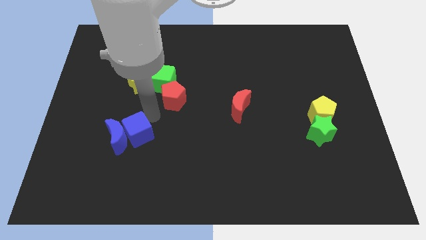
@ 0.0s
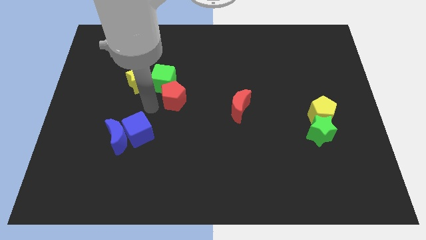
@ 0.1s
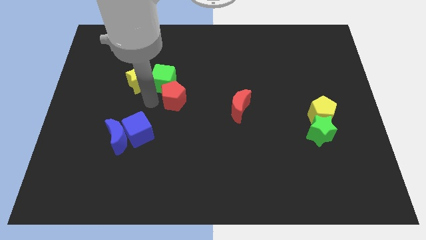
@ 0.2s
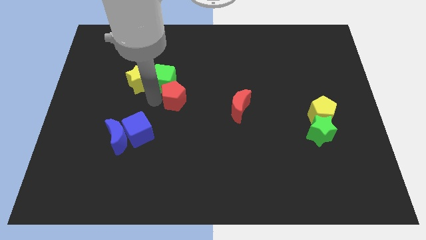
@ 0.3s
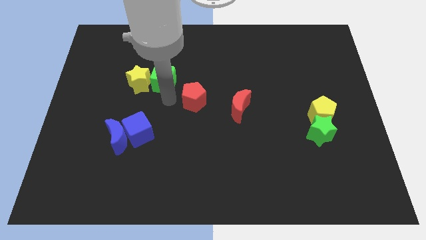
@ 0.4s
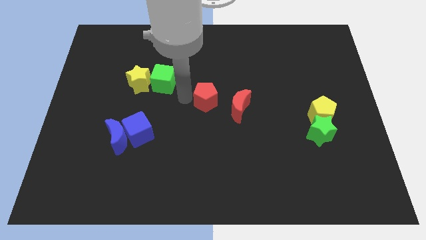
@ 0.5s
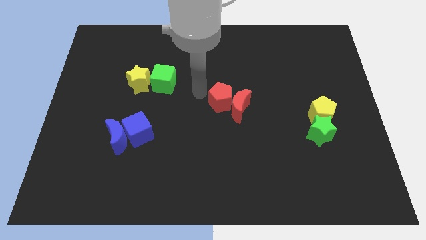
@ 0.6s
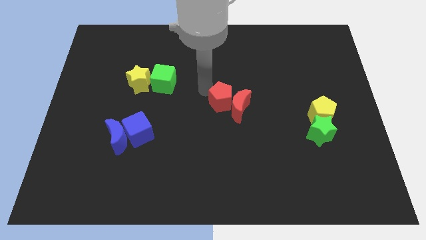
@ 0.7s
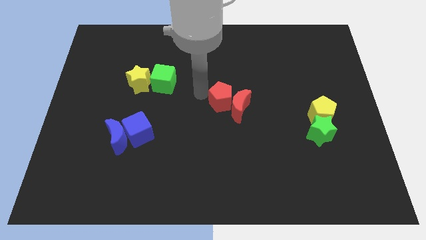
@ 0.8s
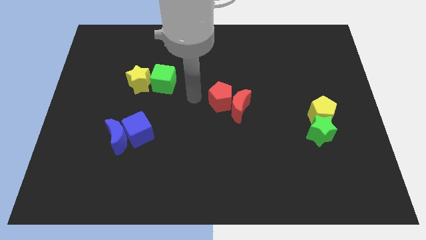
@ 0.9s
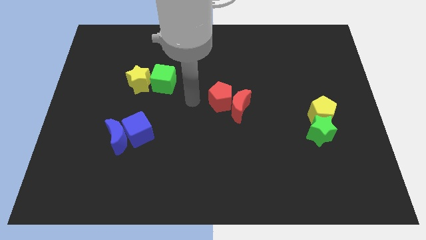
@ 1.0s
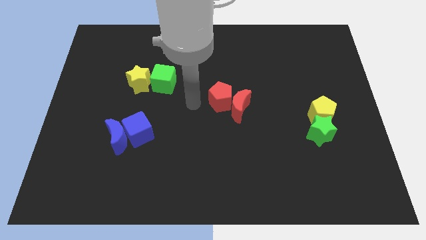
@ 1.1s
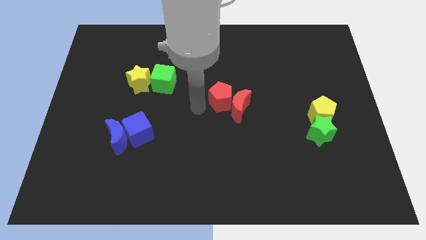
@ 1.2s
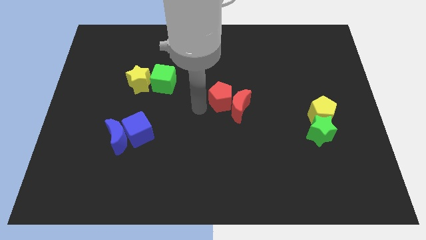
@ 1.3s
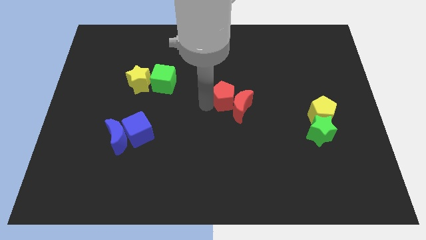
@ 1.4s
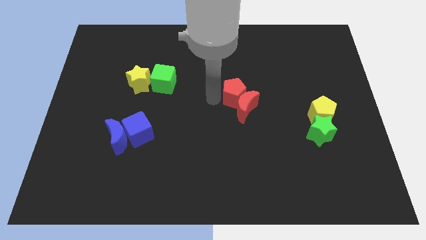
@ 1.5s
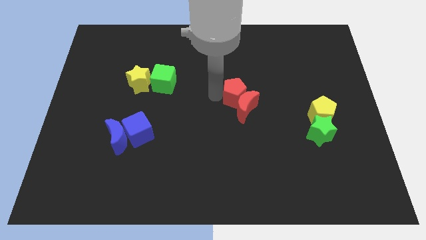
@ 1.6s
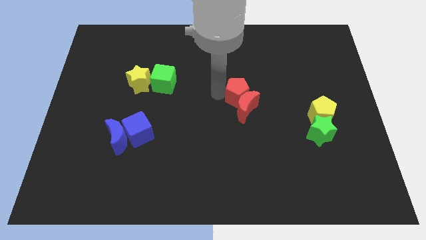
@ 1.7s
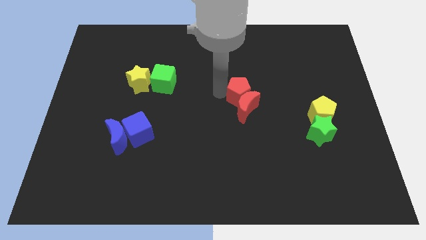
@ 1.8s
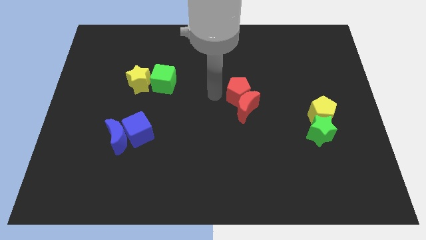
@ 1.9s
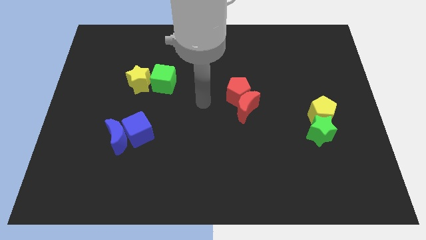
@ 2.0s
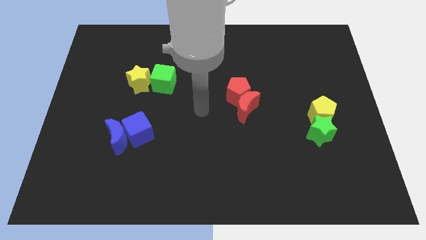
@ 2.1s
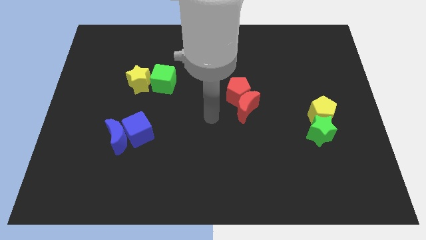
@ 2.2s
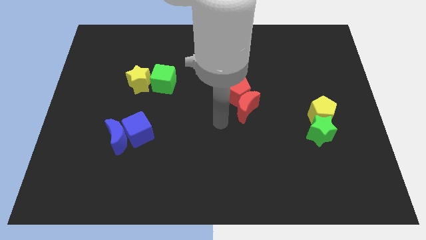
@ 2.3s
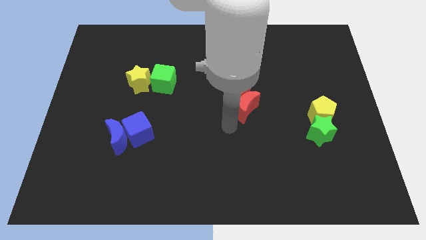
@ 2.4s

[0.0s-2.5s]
move red pentagon into the red moon

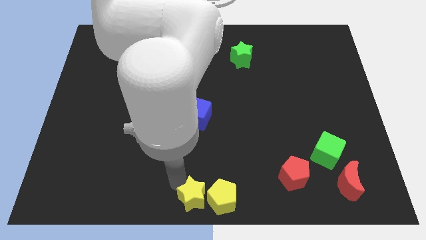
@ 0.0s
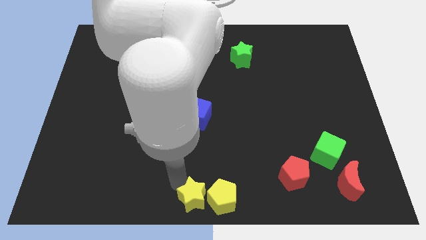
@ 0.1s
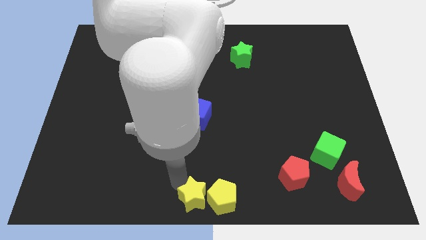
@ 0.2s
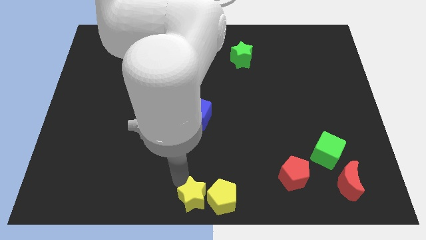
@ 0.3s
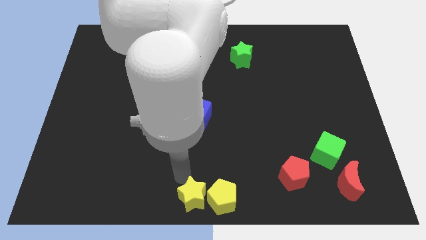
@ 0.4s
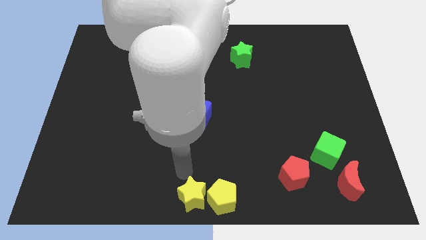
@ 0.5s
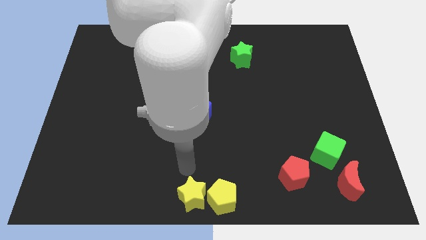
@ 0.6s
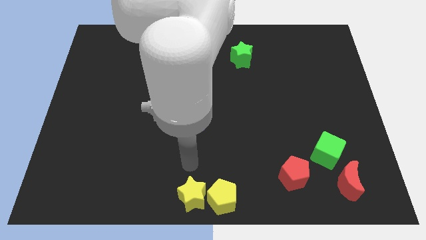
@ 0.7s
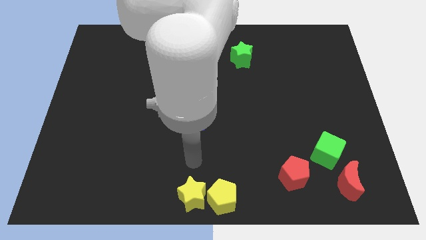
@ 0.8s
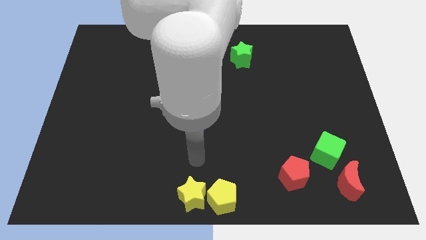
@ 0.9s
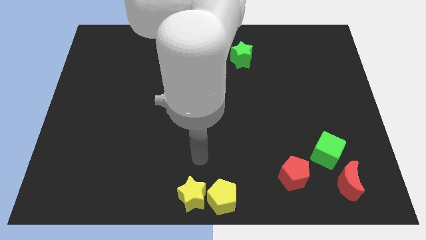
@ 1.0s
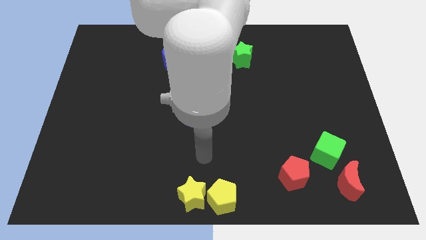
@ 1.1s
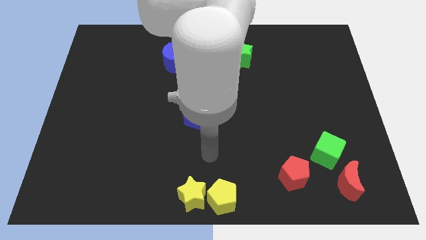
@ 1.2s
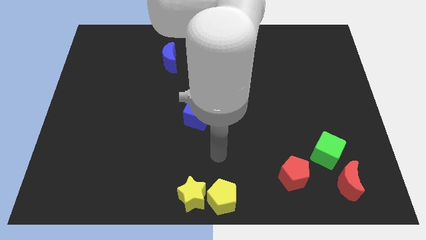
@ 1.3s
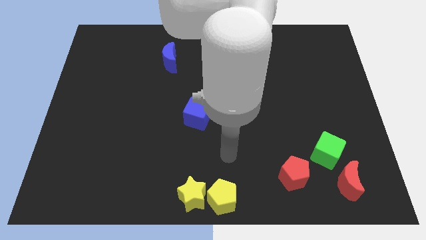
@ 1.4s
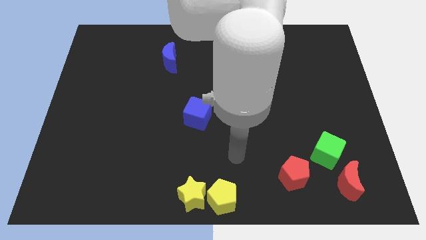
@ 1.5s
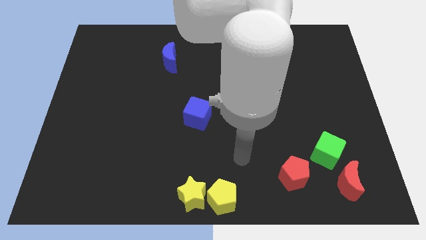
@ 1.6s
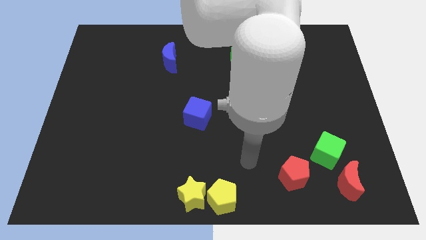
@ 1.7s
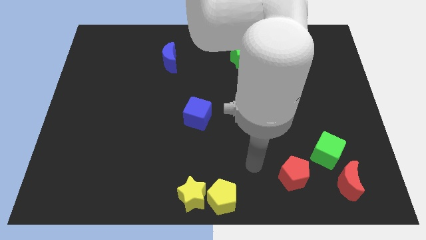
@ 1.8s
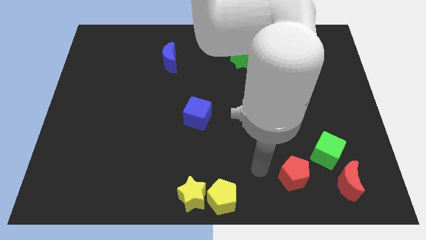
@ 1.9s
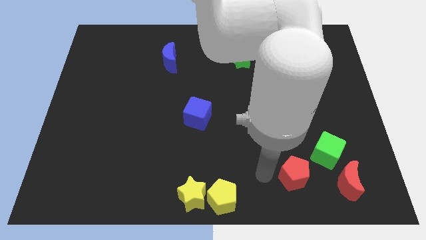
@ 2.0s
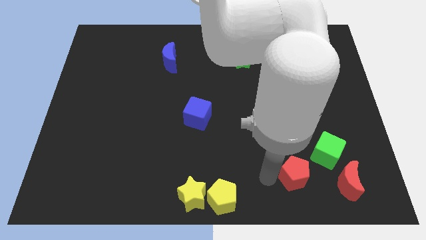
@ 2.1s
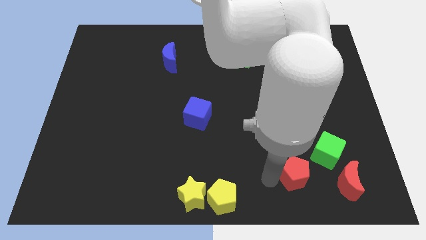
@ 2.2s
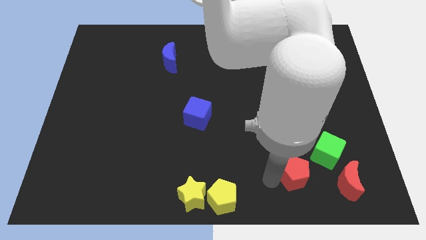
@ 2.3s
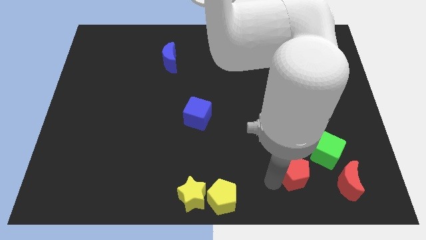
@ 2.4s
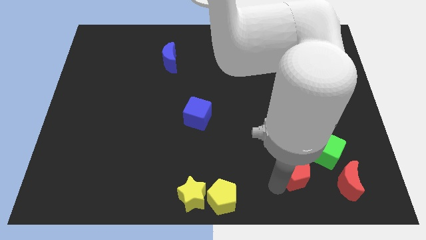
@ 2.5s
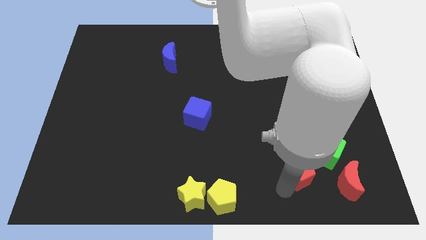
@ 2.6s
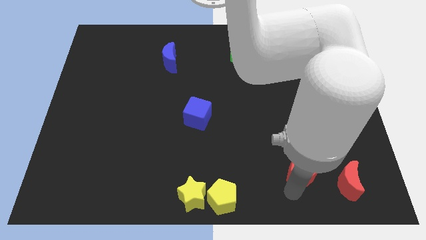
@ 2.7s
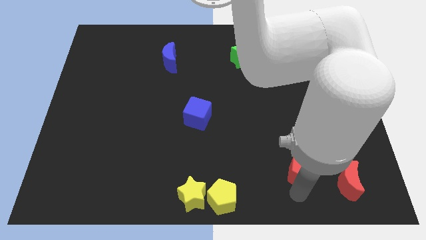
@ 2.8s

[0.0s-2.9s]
move the arm towards the red pentagon

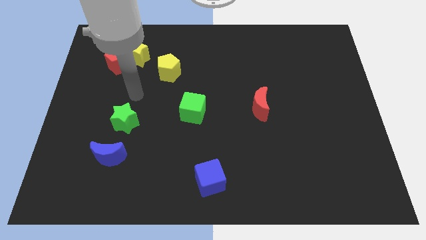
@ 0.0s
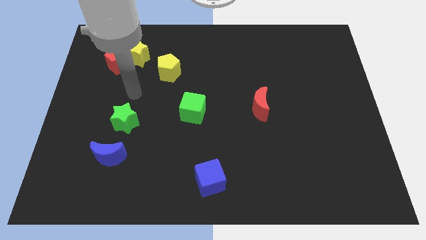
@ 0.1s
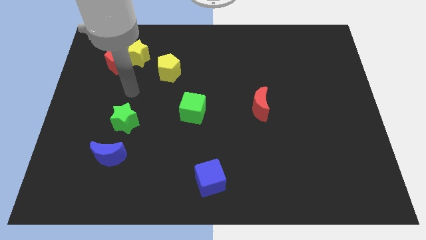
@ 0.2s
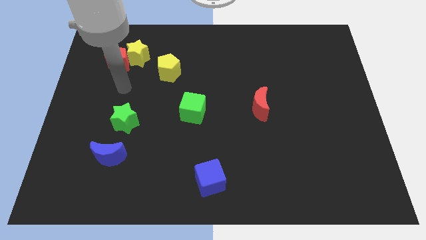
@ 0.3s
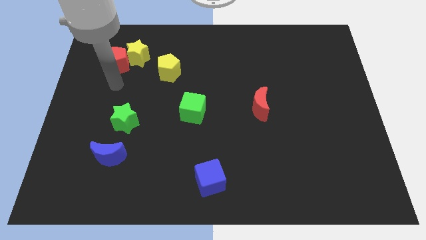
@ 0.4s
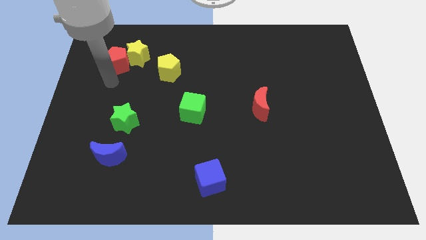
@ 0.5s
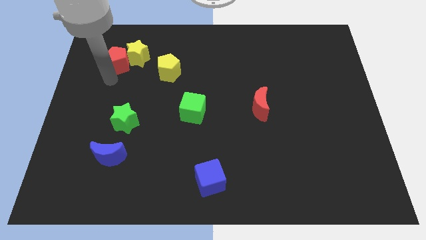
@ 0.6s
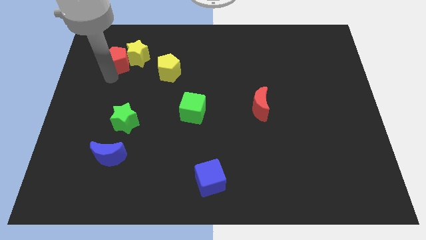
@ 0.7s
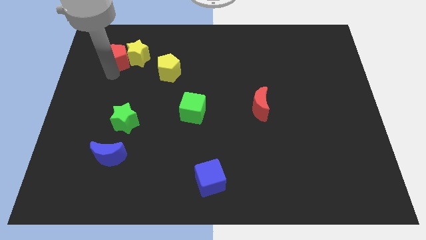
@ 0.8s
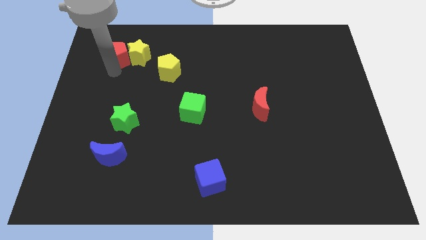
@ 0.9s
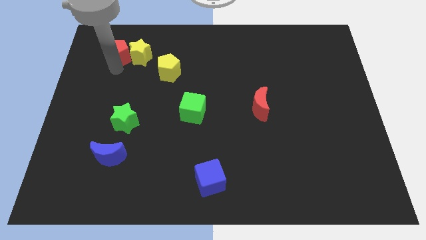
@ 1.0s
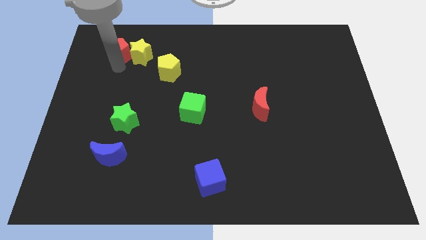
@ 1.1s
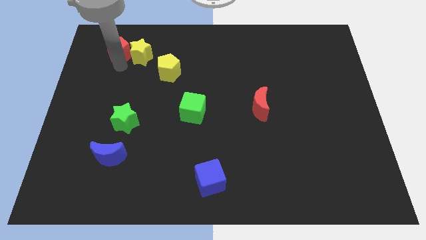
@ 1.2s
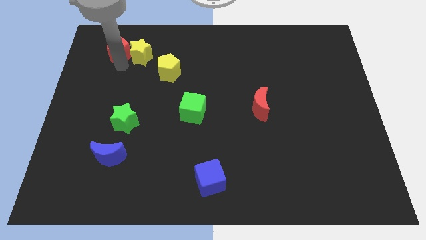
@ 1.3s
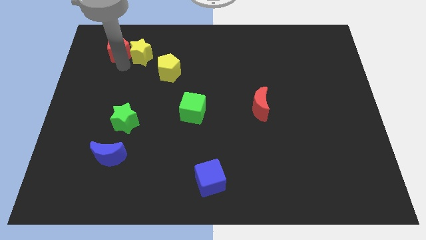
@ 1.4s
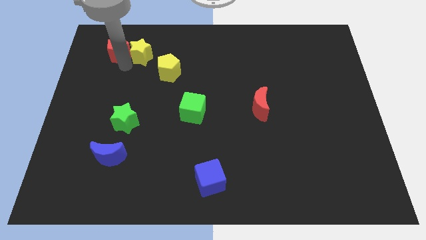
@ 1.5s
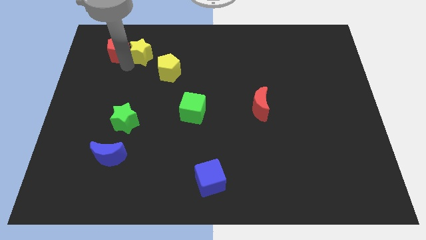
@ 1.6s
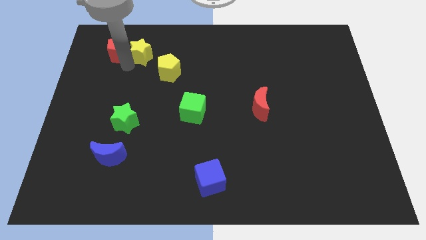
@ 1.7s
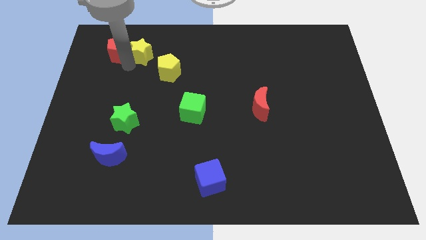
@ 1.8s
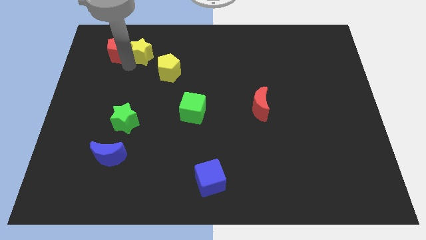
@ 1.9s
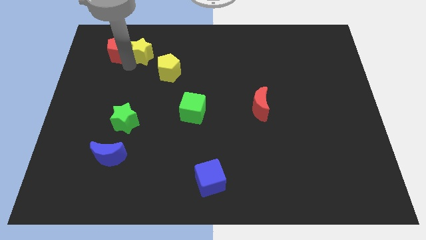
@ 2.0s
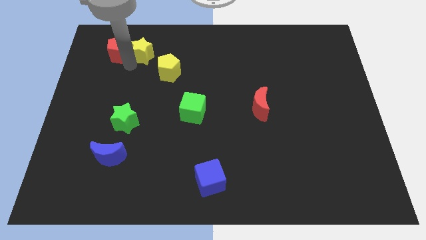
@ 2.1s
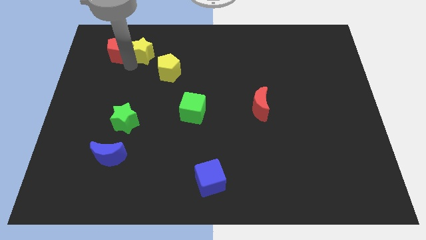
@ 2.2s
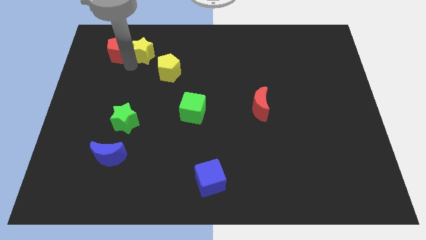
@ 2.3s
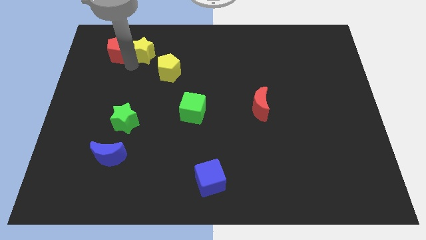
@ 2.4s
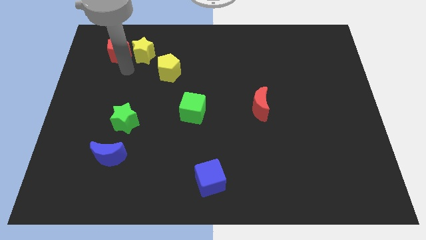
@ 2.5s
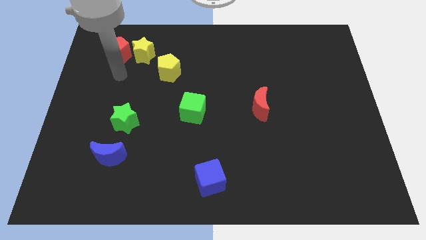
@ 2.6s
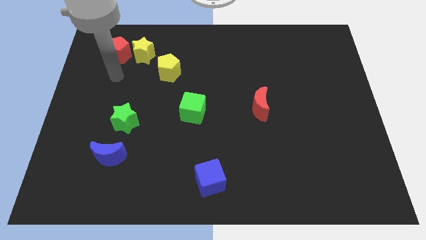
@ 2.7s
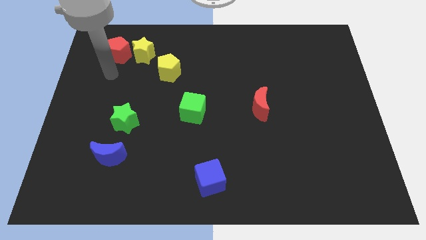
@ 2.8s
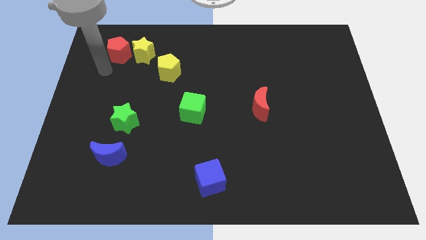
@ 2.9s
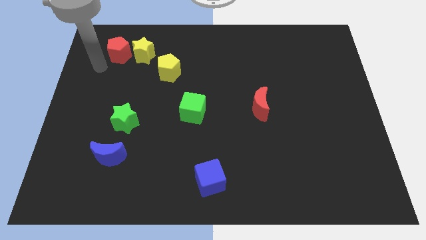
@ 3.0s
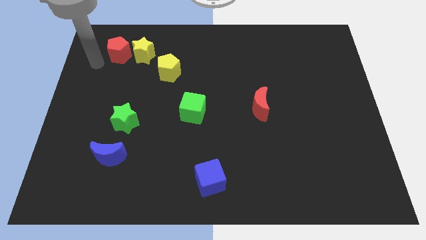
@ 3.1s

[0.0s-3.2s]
slightly push red pentagon upwards

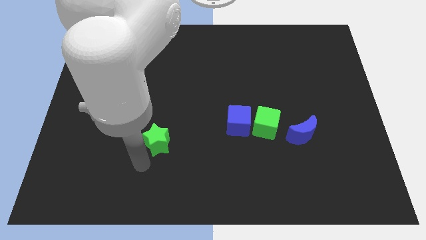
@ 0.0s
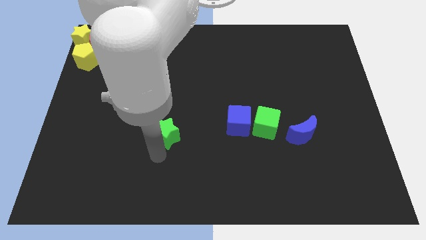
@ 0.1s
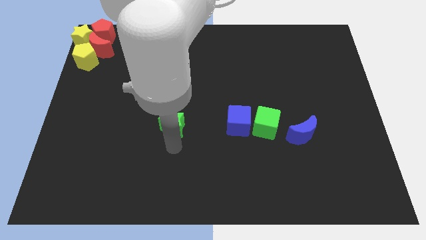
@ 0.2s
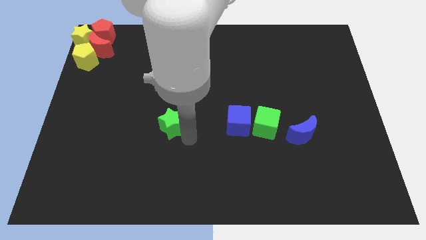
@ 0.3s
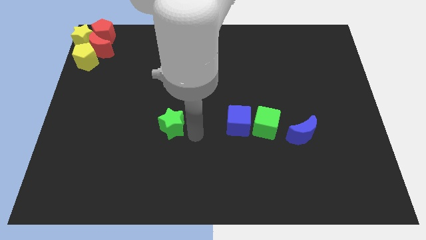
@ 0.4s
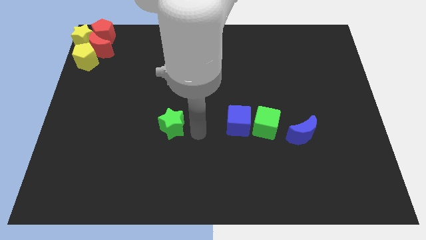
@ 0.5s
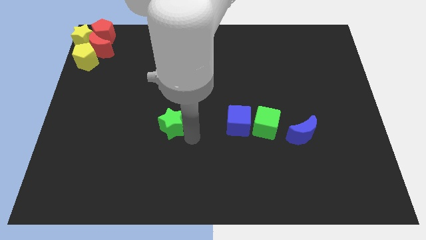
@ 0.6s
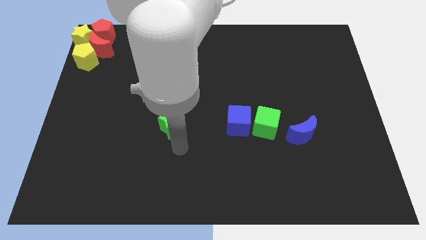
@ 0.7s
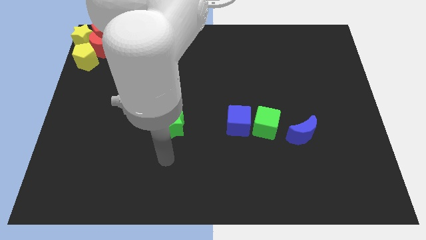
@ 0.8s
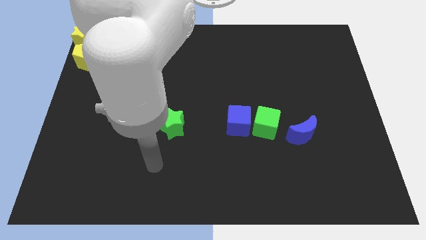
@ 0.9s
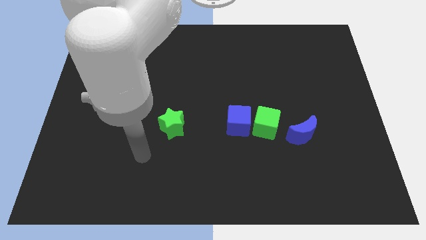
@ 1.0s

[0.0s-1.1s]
put the green star parallel left to the blue cube
